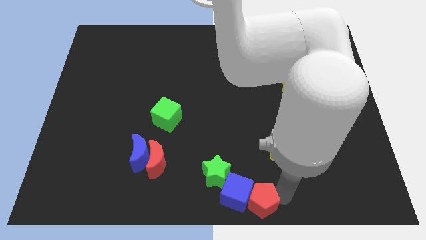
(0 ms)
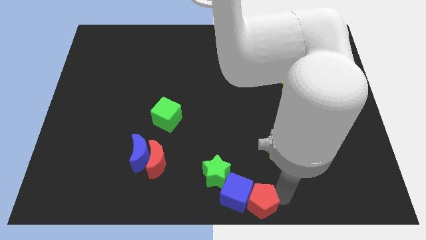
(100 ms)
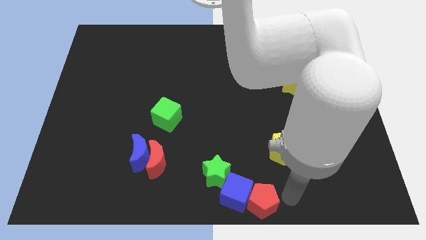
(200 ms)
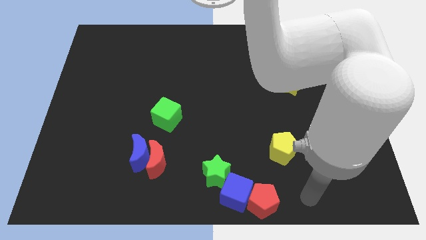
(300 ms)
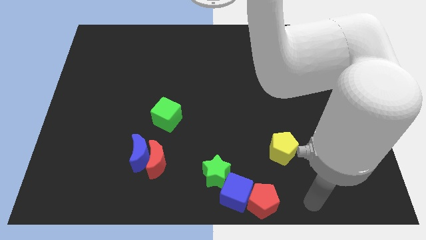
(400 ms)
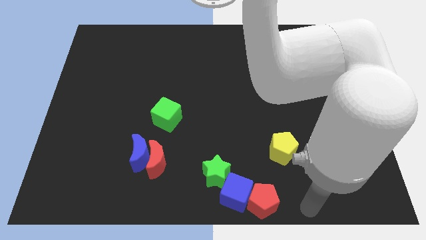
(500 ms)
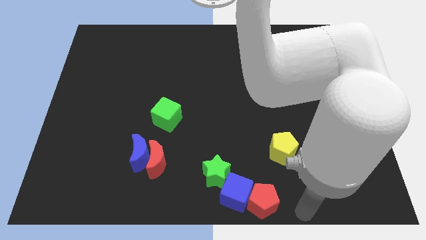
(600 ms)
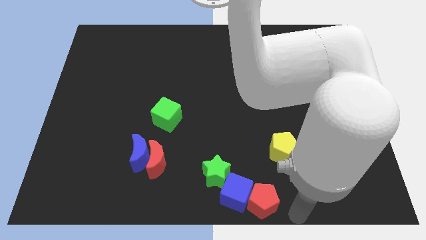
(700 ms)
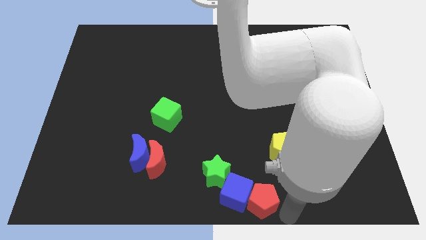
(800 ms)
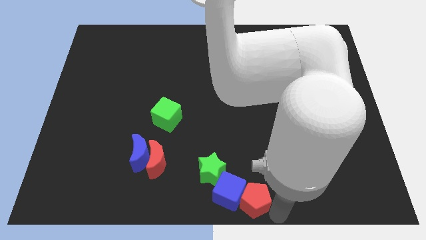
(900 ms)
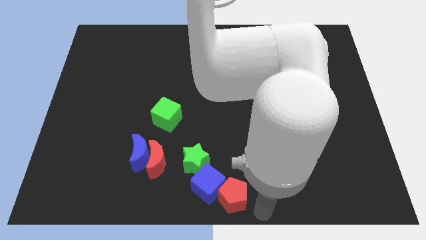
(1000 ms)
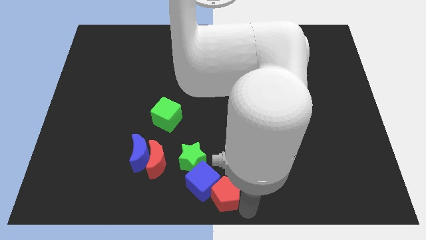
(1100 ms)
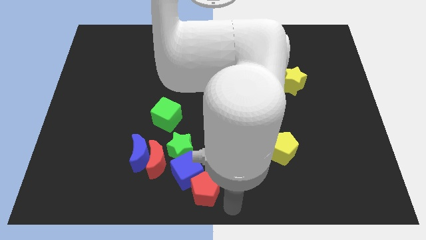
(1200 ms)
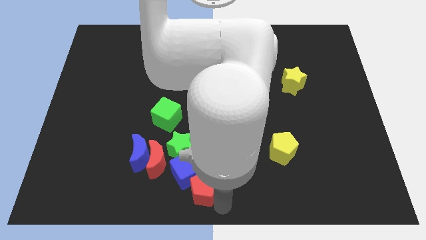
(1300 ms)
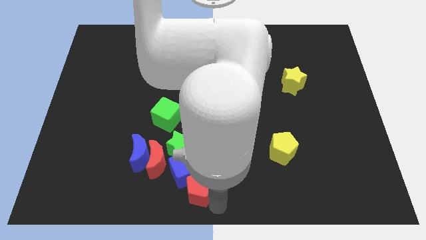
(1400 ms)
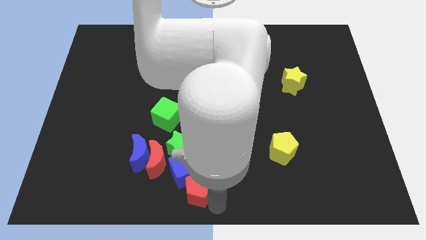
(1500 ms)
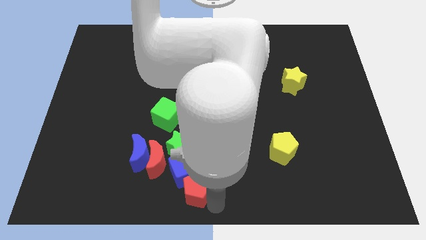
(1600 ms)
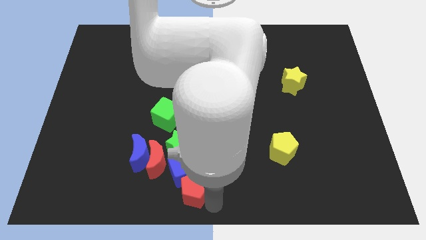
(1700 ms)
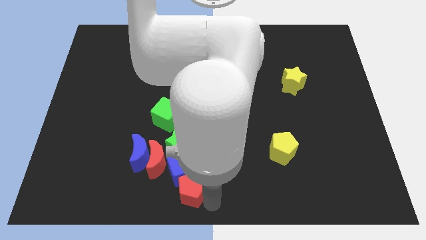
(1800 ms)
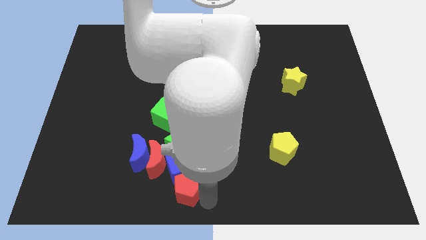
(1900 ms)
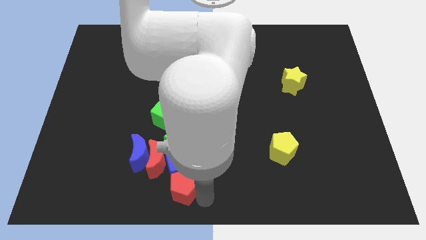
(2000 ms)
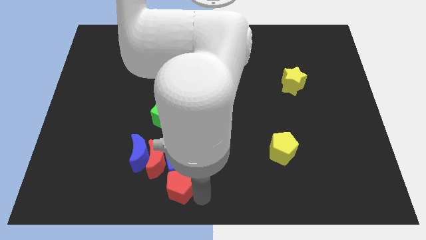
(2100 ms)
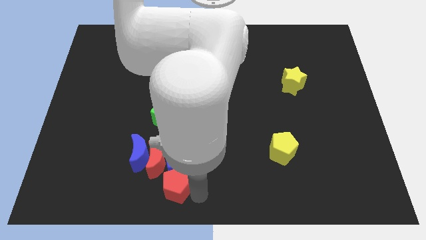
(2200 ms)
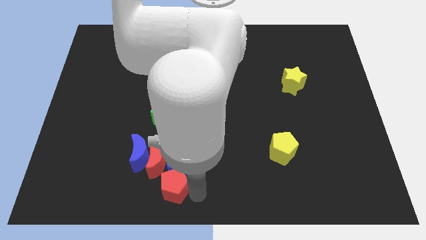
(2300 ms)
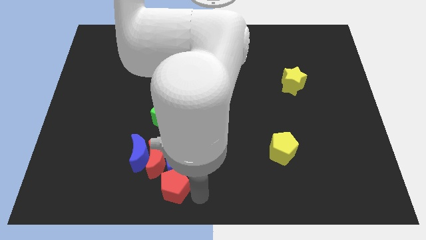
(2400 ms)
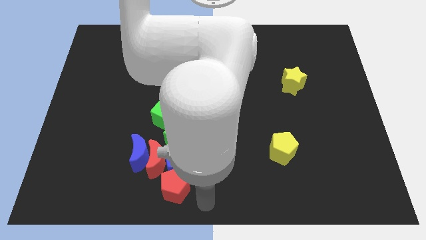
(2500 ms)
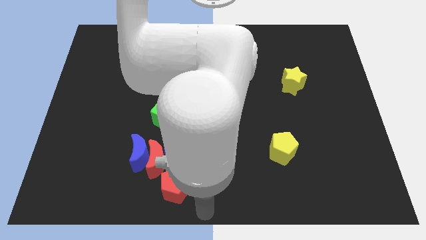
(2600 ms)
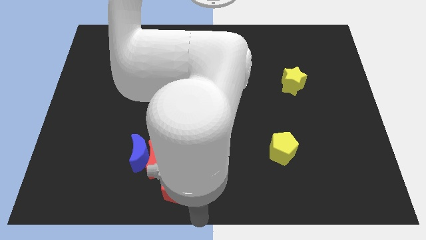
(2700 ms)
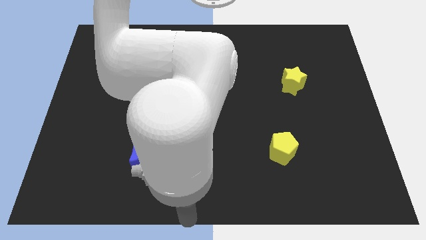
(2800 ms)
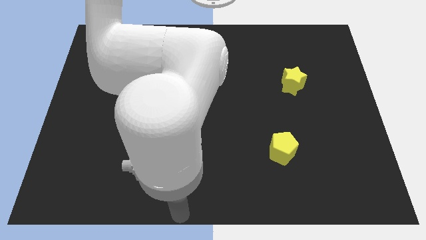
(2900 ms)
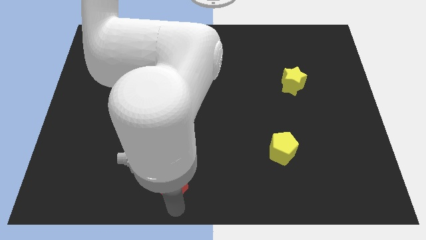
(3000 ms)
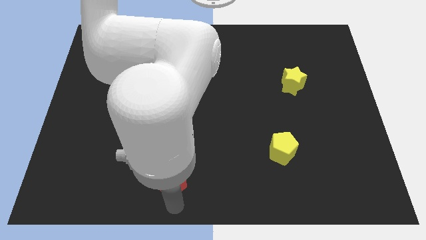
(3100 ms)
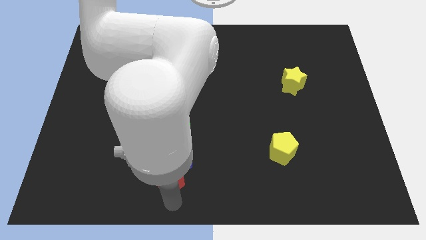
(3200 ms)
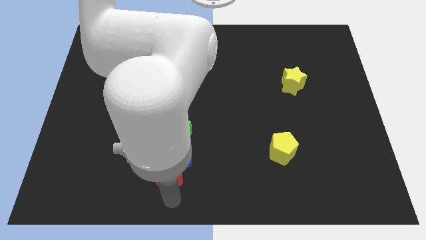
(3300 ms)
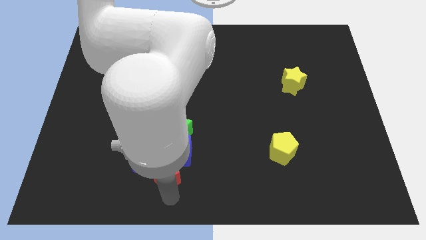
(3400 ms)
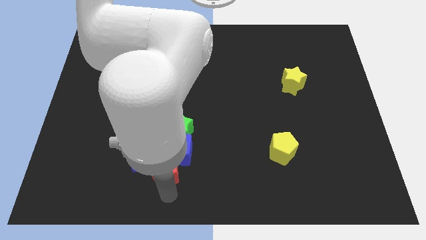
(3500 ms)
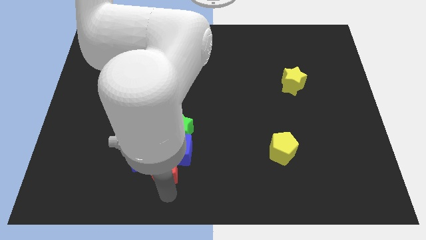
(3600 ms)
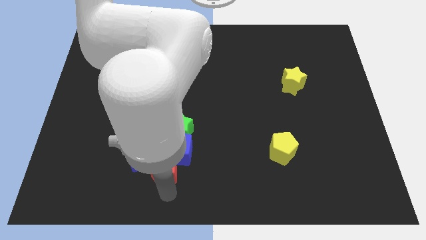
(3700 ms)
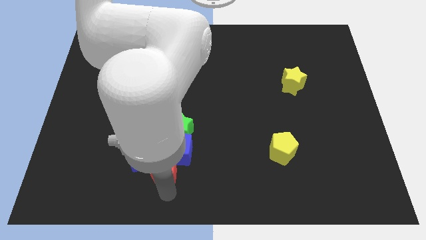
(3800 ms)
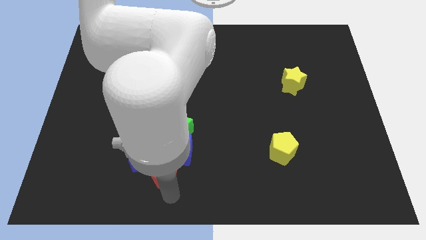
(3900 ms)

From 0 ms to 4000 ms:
push the red pentagon green star and blue cube into the moons

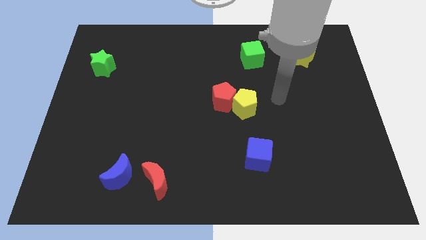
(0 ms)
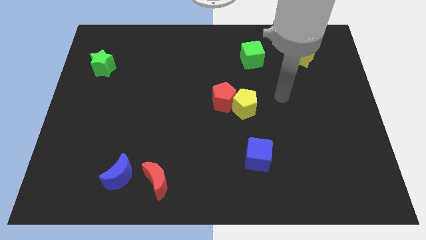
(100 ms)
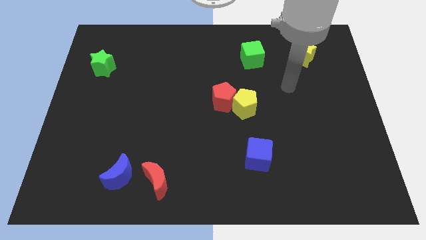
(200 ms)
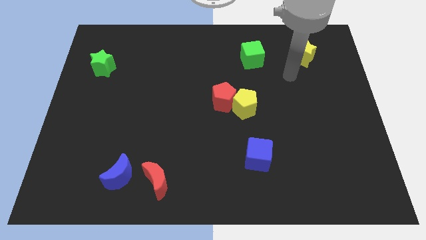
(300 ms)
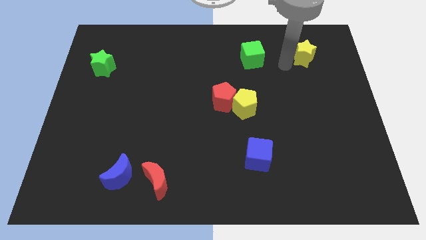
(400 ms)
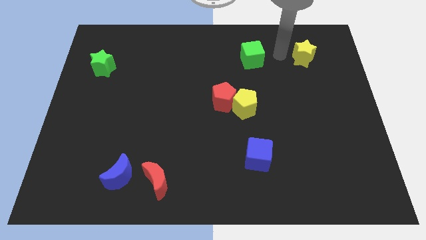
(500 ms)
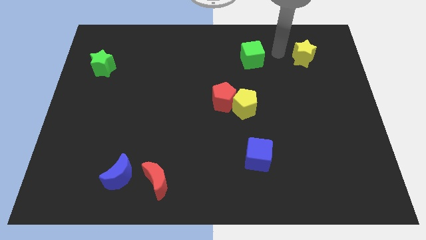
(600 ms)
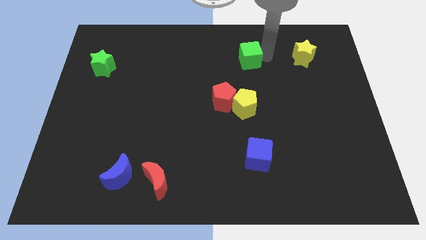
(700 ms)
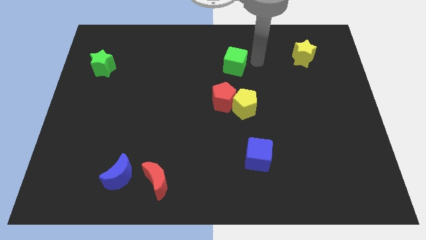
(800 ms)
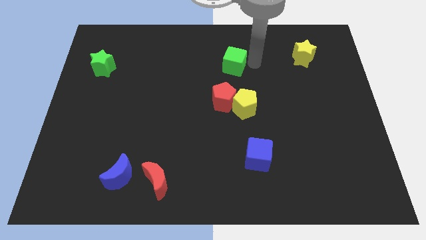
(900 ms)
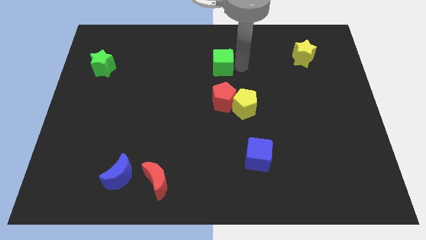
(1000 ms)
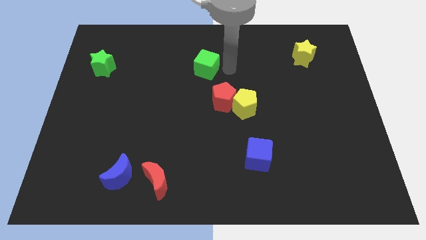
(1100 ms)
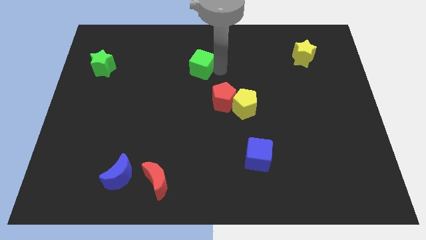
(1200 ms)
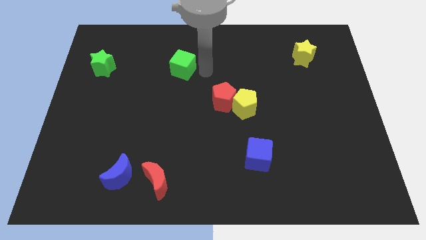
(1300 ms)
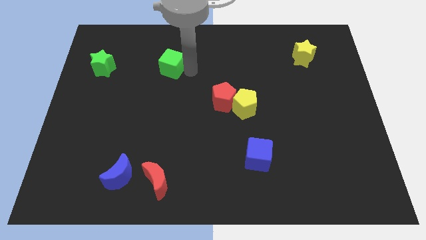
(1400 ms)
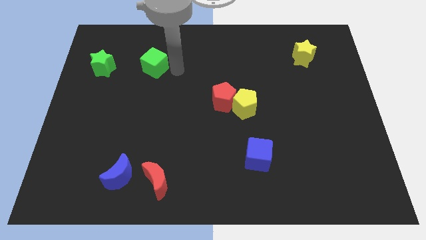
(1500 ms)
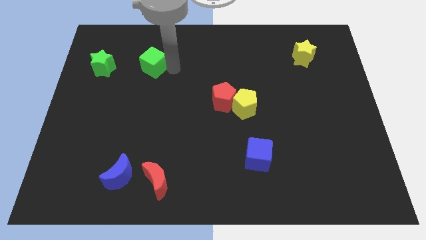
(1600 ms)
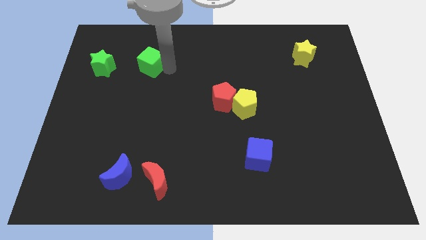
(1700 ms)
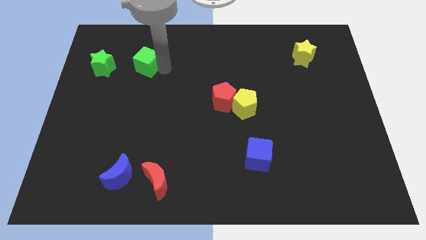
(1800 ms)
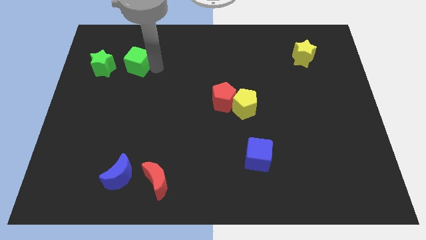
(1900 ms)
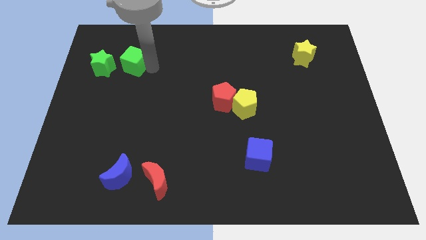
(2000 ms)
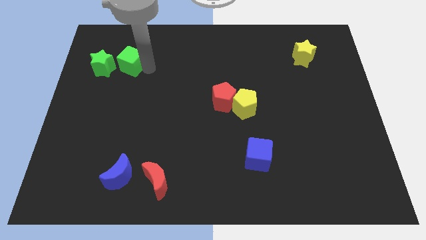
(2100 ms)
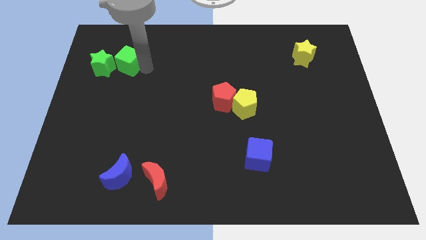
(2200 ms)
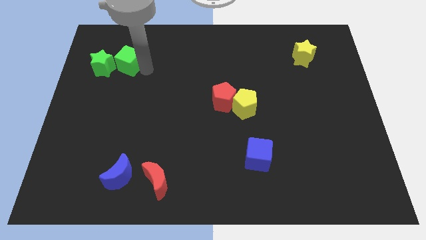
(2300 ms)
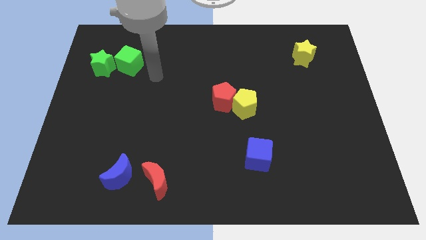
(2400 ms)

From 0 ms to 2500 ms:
push the green cube to the right of the green star

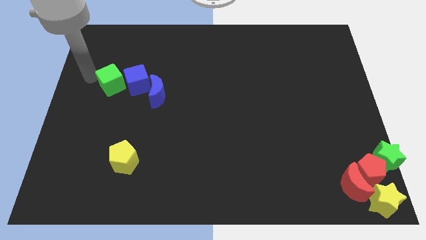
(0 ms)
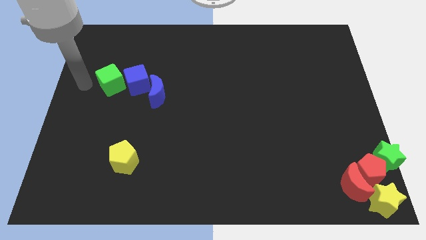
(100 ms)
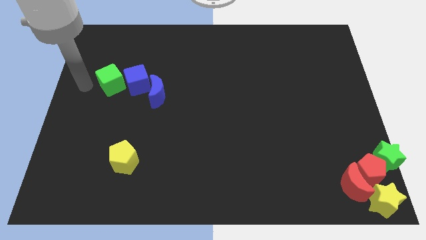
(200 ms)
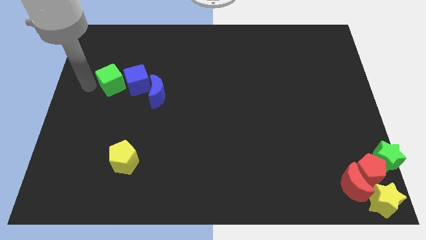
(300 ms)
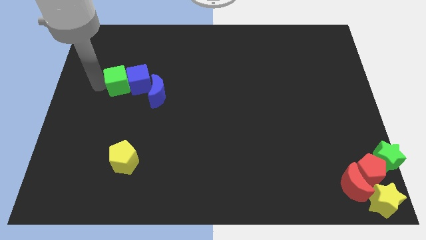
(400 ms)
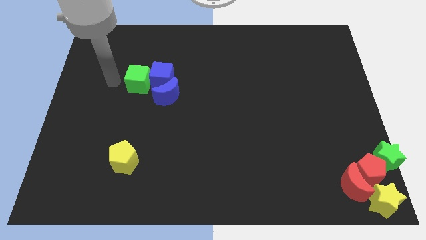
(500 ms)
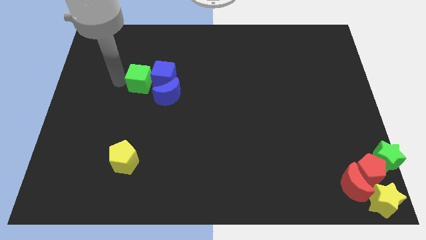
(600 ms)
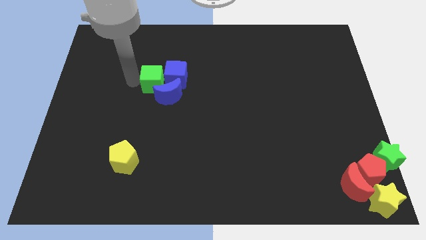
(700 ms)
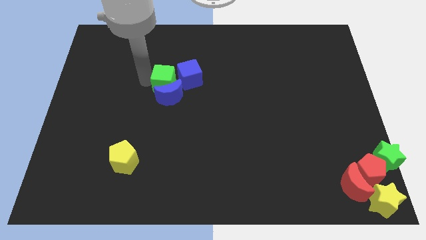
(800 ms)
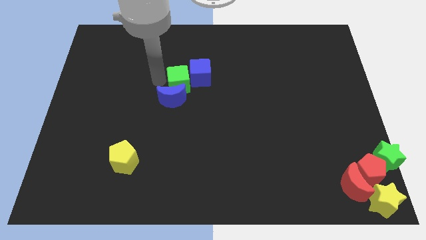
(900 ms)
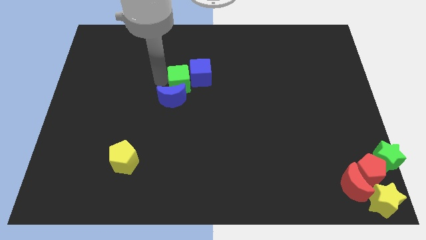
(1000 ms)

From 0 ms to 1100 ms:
push the green cube into blue blocks

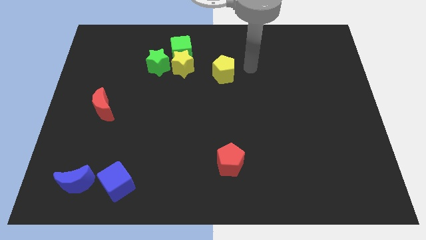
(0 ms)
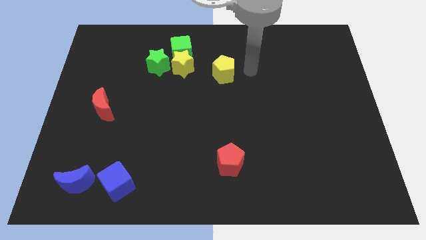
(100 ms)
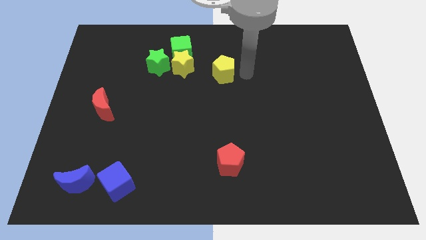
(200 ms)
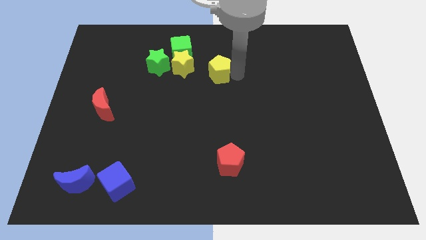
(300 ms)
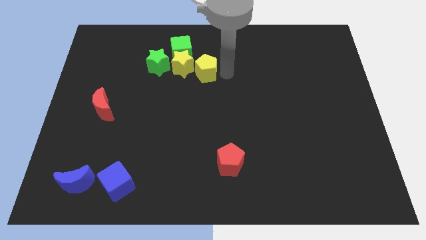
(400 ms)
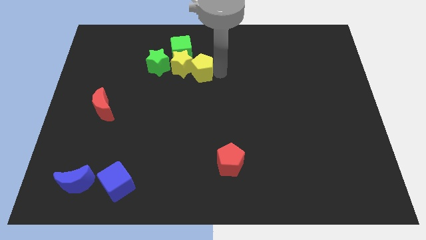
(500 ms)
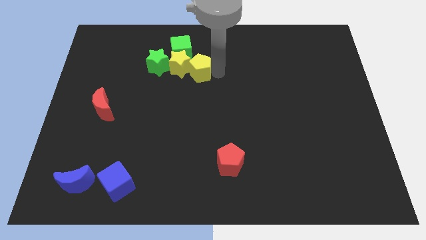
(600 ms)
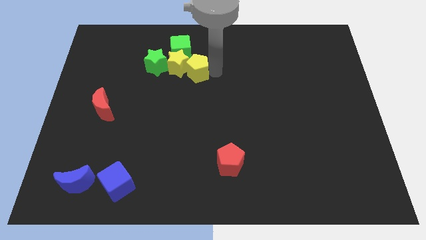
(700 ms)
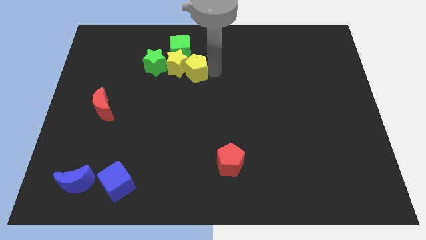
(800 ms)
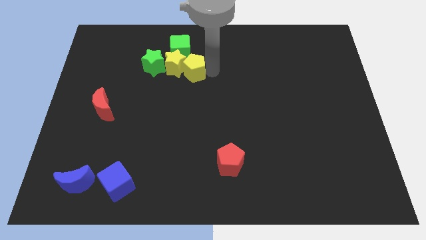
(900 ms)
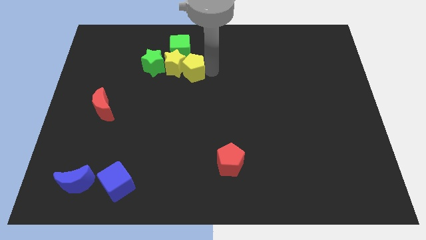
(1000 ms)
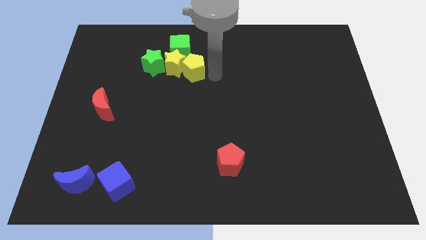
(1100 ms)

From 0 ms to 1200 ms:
add the yellow pentagon to the group of both green blocks and yellow star

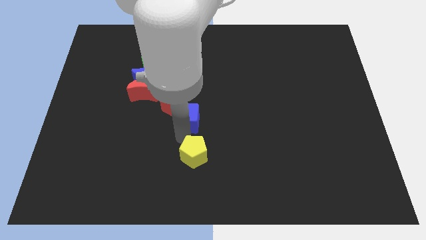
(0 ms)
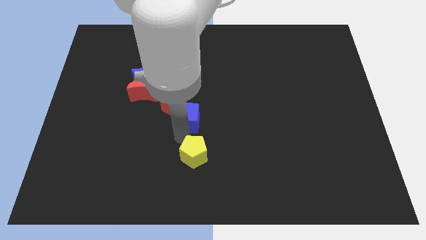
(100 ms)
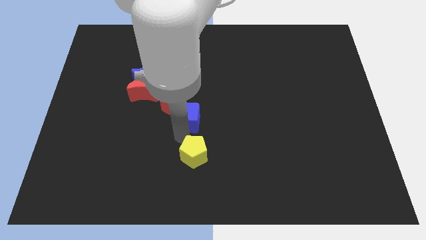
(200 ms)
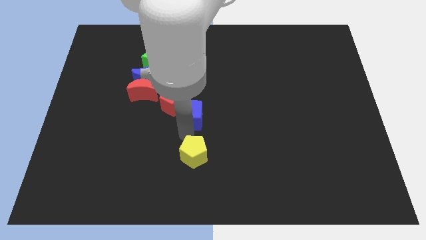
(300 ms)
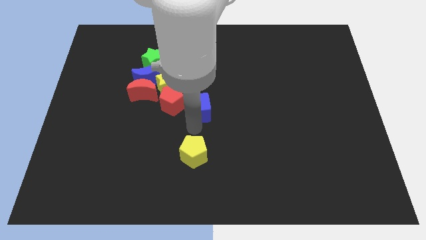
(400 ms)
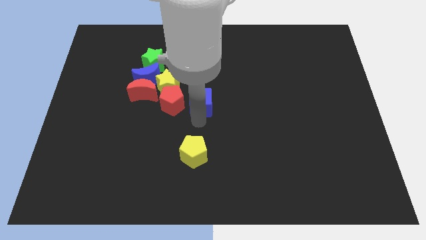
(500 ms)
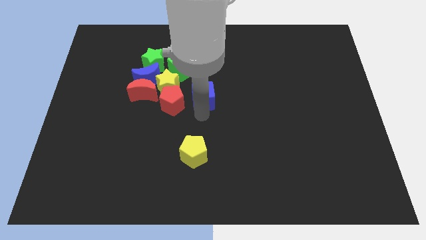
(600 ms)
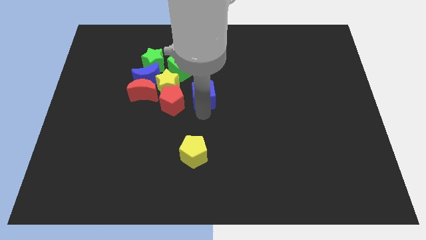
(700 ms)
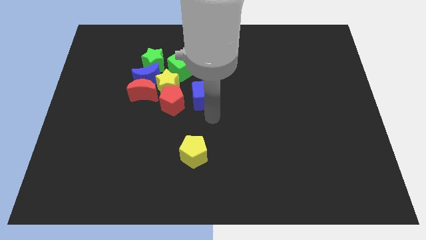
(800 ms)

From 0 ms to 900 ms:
place the blue cube to the right of the red pentagon
